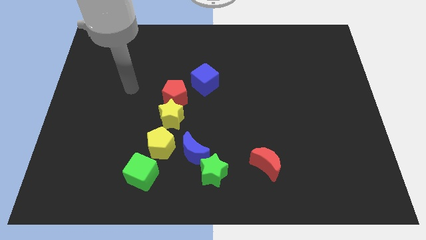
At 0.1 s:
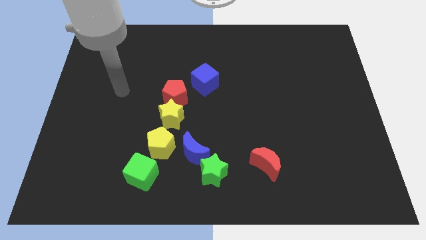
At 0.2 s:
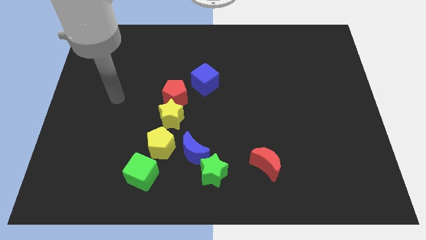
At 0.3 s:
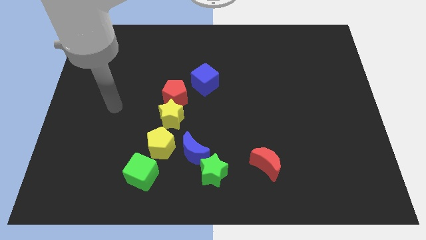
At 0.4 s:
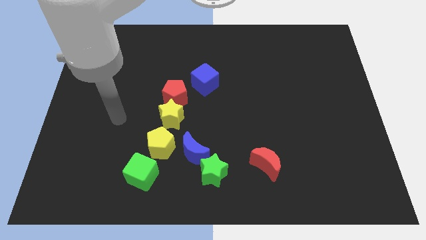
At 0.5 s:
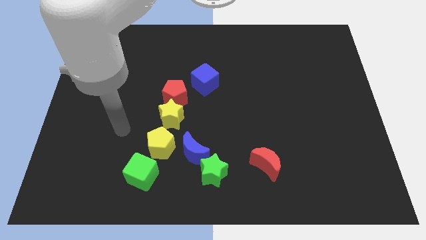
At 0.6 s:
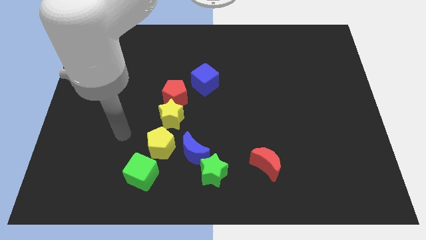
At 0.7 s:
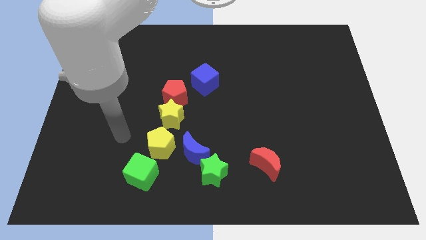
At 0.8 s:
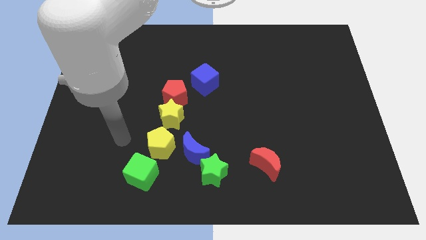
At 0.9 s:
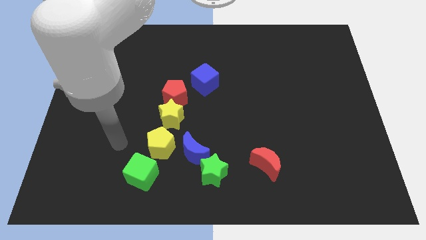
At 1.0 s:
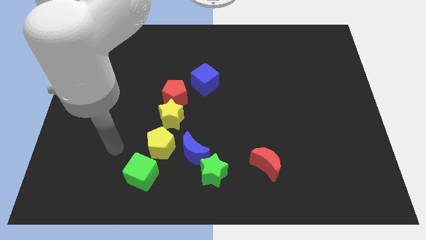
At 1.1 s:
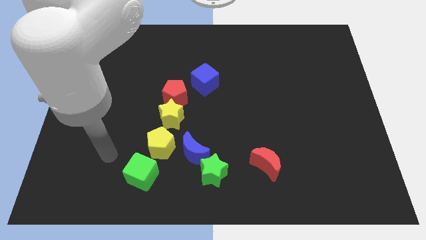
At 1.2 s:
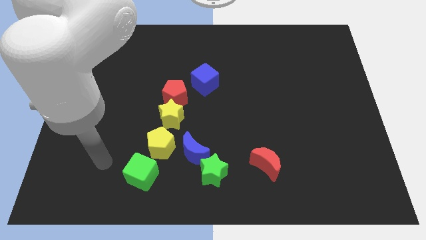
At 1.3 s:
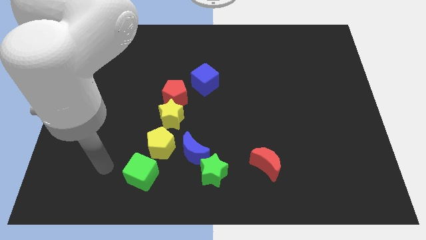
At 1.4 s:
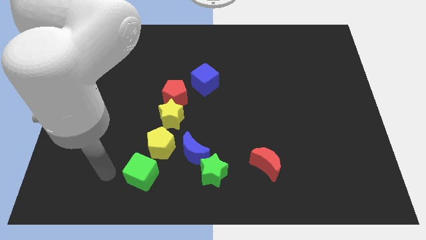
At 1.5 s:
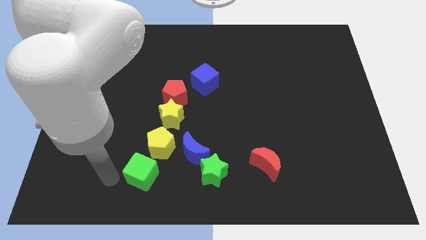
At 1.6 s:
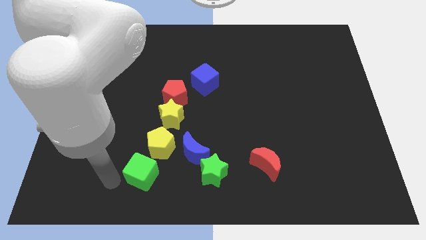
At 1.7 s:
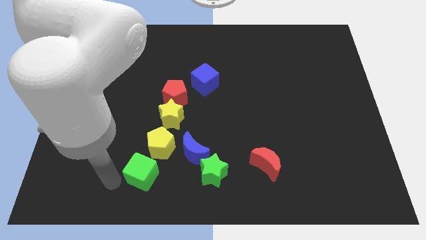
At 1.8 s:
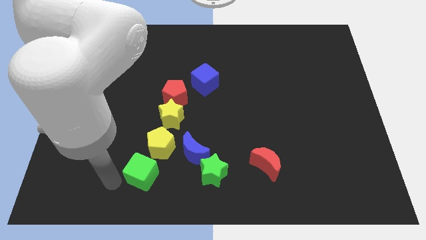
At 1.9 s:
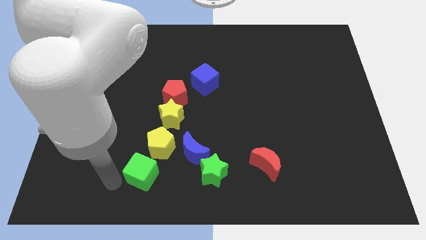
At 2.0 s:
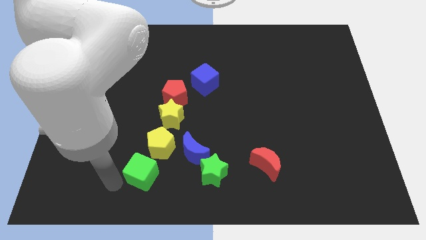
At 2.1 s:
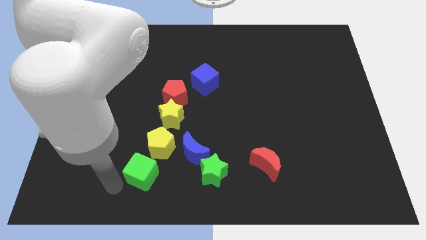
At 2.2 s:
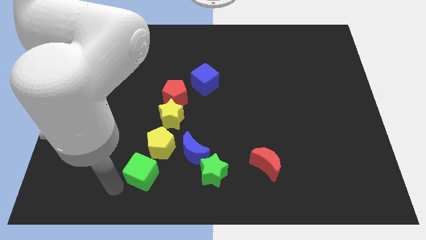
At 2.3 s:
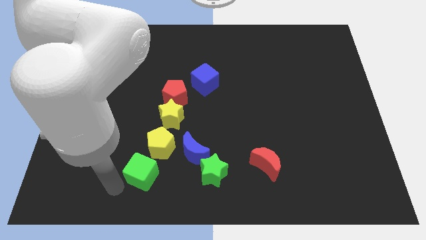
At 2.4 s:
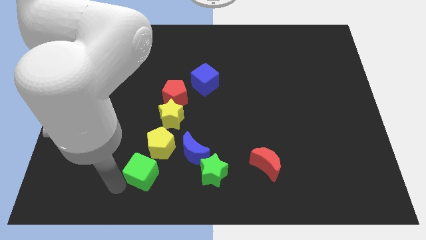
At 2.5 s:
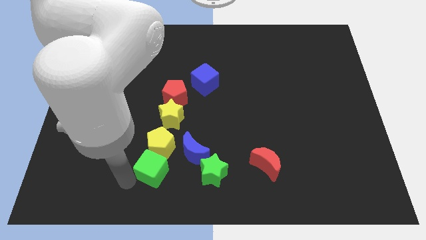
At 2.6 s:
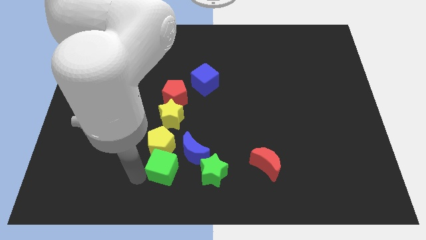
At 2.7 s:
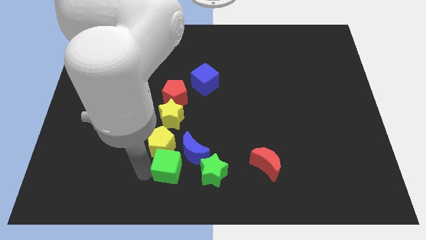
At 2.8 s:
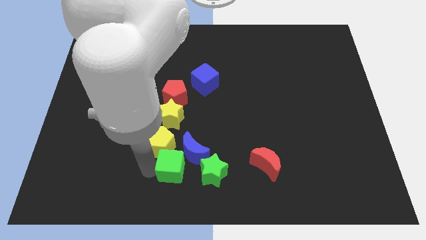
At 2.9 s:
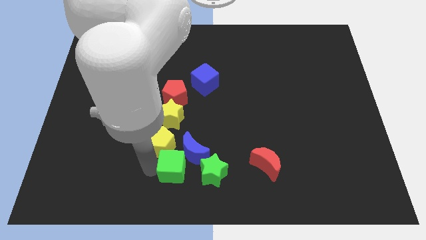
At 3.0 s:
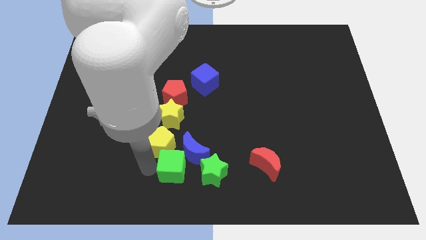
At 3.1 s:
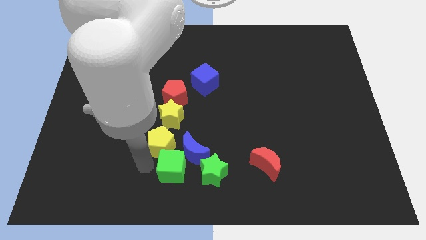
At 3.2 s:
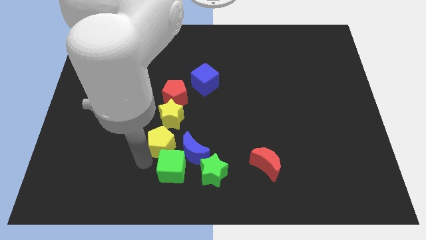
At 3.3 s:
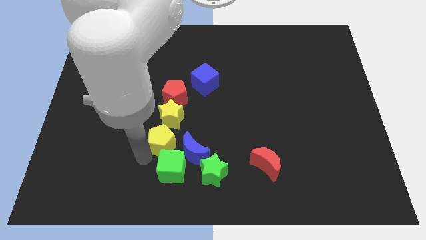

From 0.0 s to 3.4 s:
push the green cube into yellow pentagon

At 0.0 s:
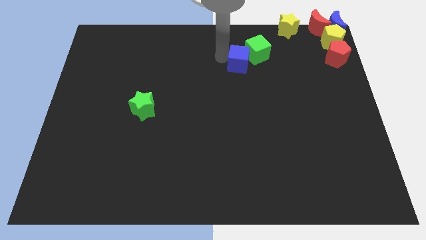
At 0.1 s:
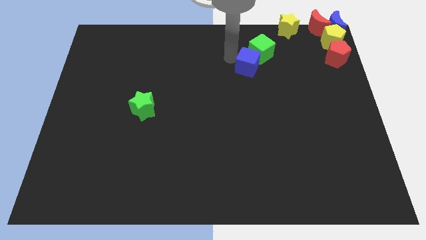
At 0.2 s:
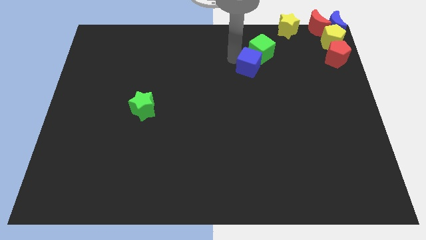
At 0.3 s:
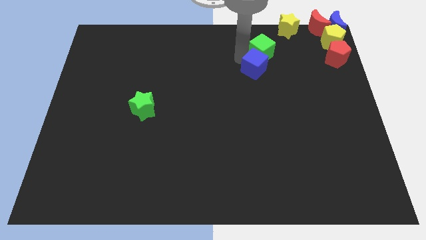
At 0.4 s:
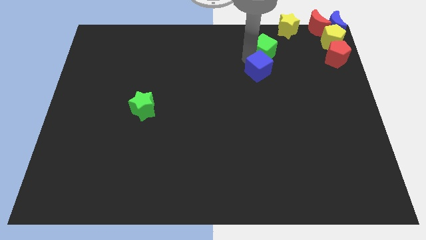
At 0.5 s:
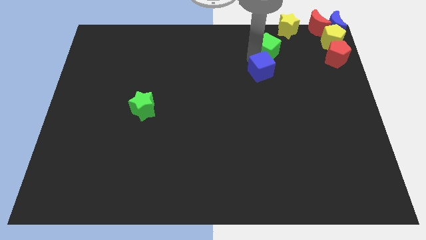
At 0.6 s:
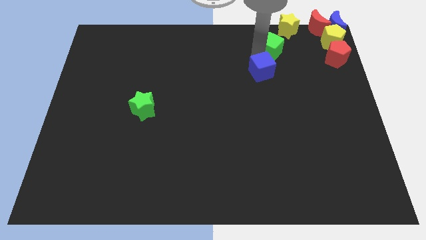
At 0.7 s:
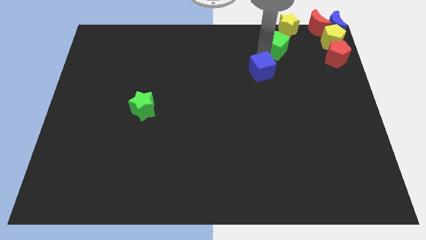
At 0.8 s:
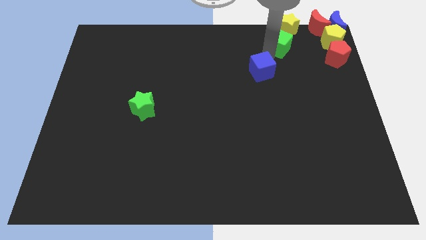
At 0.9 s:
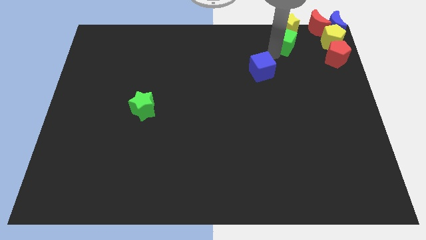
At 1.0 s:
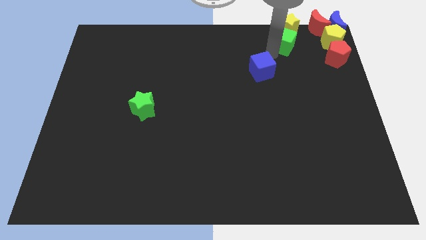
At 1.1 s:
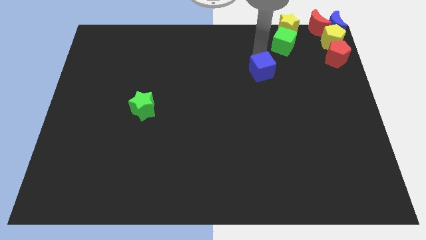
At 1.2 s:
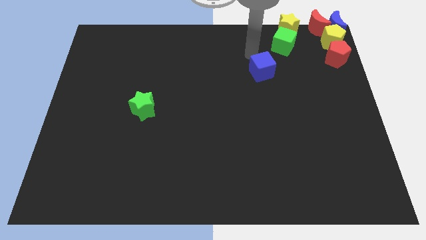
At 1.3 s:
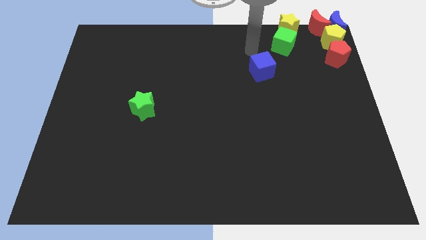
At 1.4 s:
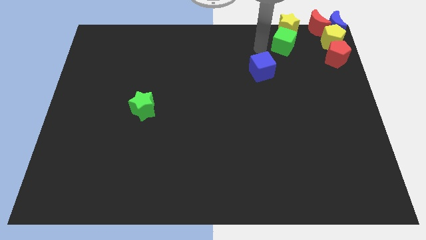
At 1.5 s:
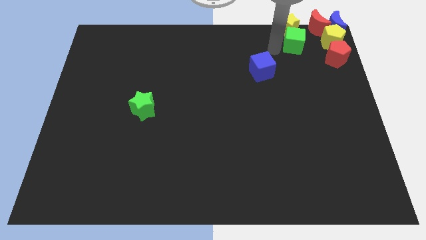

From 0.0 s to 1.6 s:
push the green cube below the yellow star

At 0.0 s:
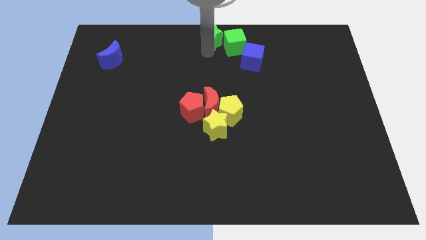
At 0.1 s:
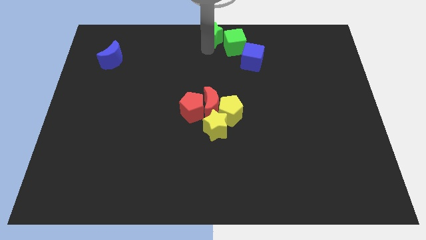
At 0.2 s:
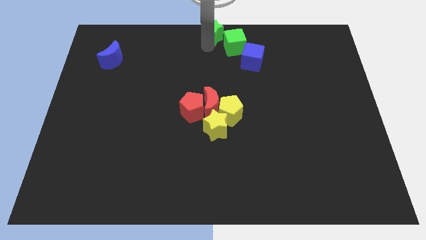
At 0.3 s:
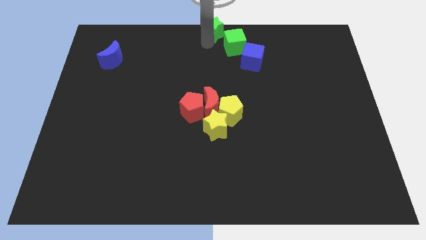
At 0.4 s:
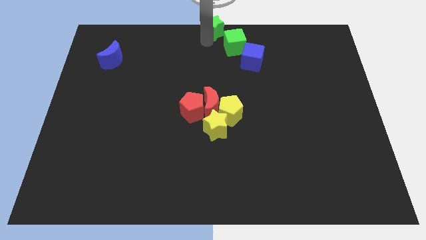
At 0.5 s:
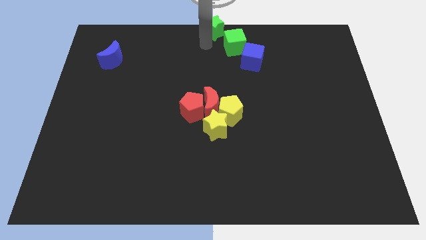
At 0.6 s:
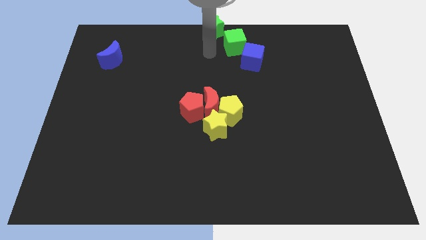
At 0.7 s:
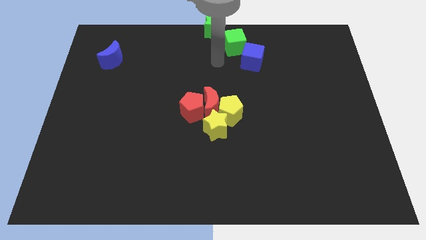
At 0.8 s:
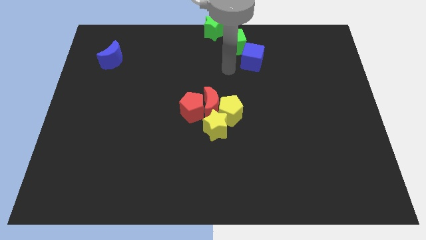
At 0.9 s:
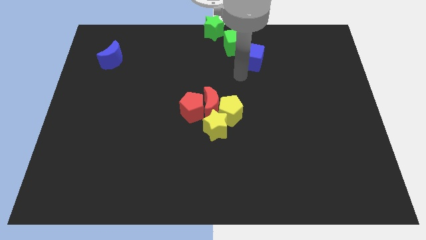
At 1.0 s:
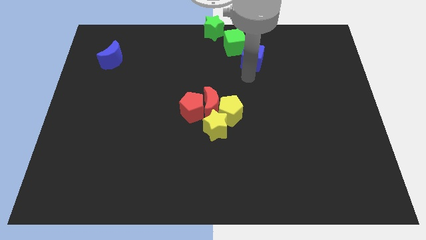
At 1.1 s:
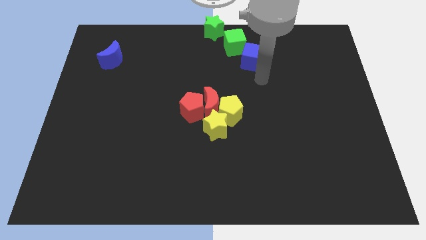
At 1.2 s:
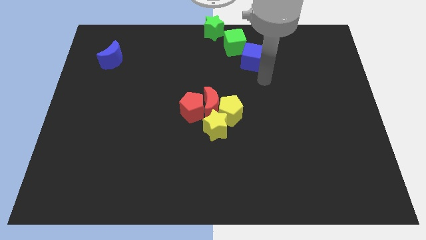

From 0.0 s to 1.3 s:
move your arm below the blue cube

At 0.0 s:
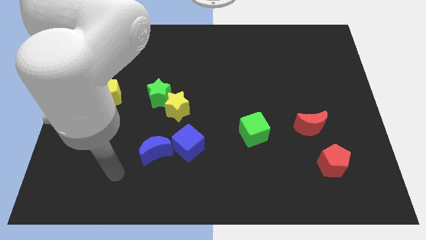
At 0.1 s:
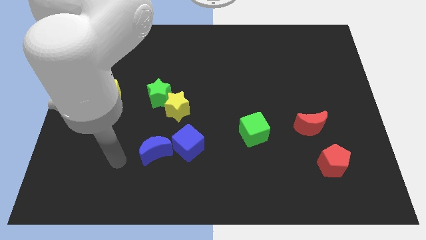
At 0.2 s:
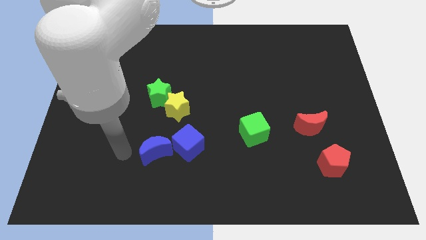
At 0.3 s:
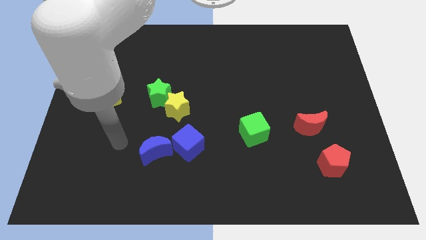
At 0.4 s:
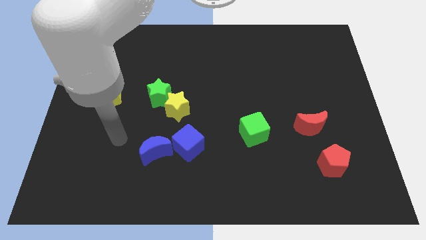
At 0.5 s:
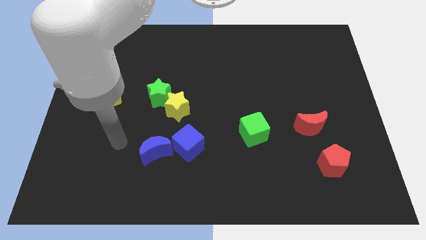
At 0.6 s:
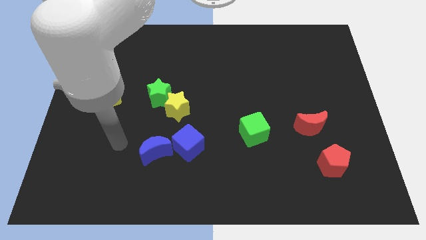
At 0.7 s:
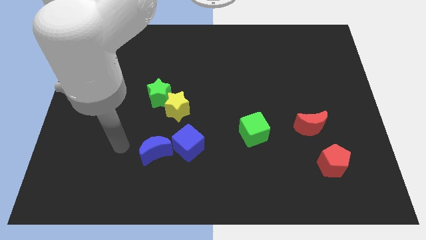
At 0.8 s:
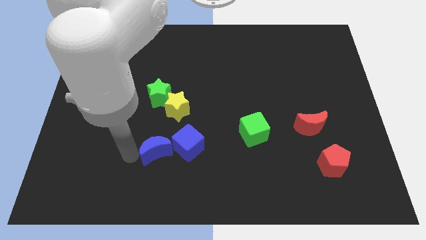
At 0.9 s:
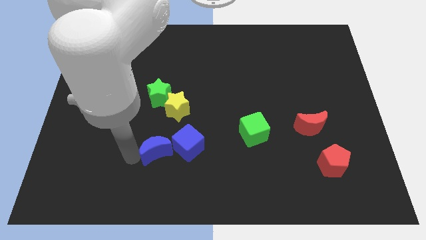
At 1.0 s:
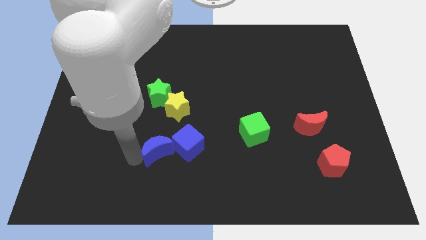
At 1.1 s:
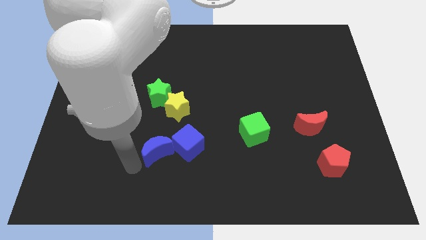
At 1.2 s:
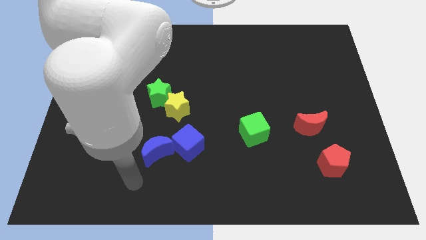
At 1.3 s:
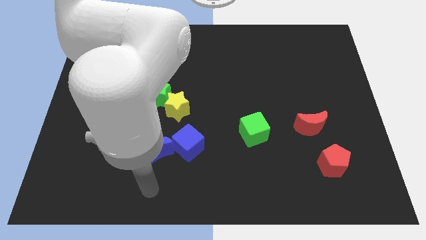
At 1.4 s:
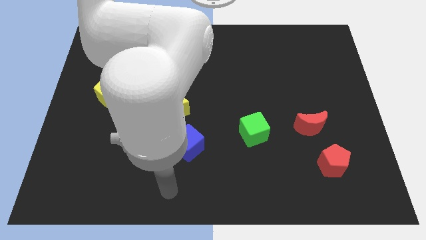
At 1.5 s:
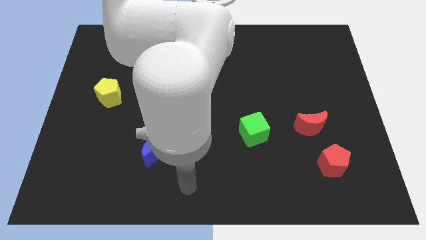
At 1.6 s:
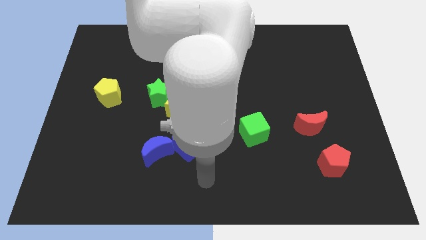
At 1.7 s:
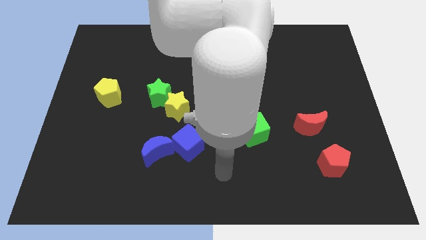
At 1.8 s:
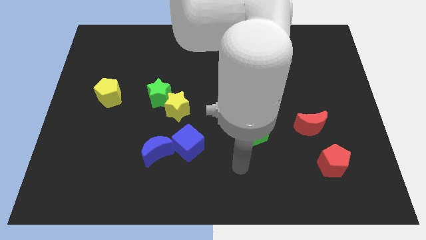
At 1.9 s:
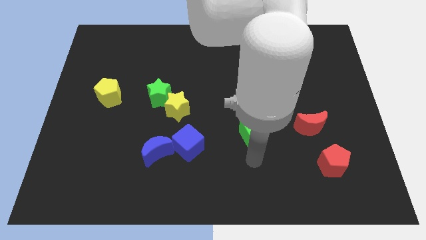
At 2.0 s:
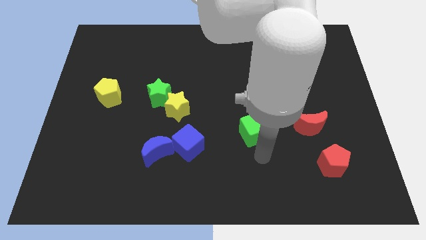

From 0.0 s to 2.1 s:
move your arm to the bottom of green cube

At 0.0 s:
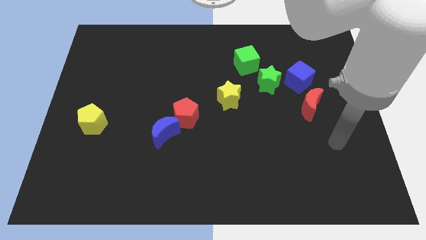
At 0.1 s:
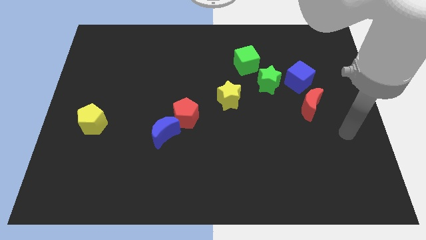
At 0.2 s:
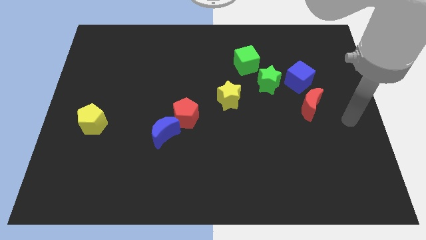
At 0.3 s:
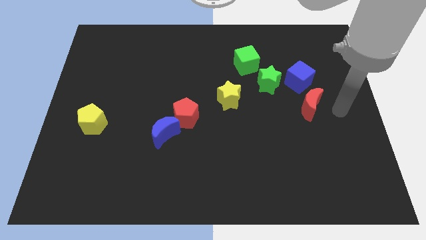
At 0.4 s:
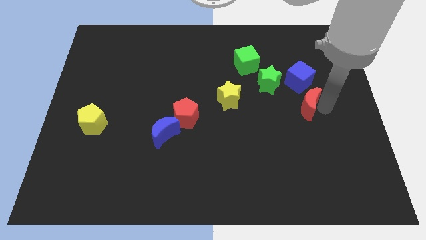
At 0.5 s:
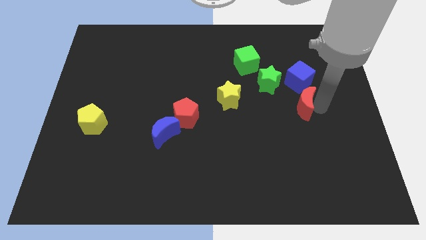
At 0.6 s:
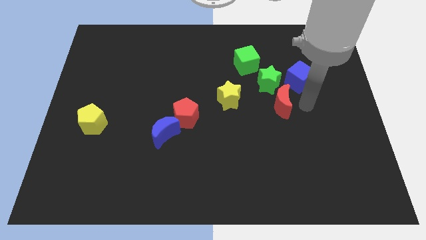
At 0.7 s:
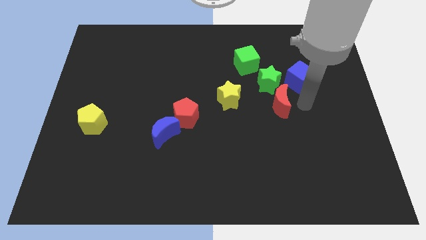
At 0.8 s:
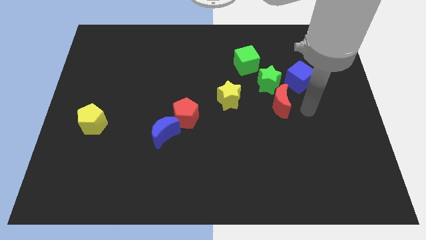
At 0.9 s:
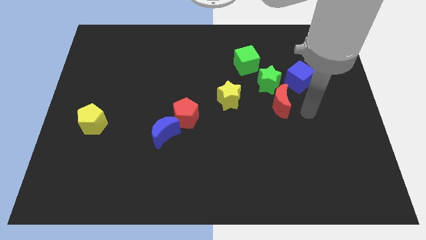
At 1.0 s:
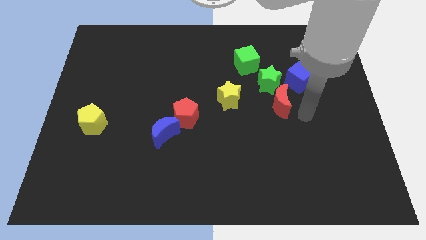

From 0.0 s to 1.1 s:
push red moon towards green star
